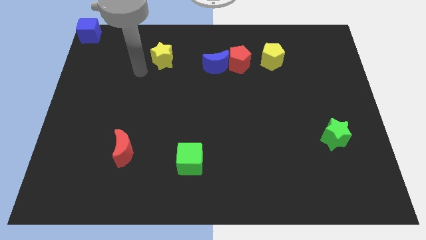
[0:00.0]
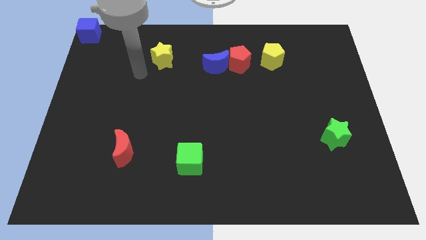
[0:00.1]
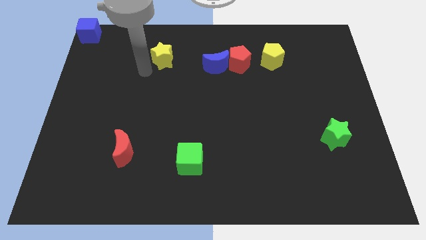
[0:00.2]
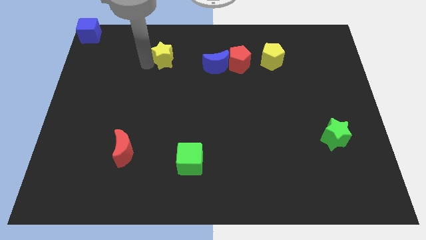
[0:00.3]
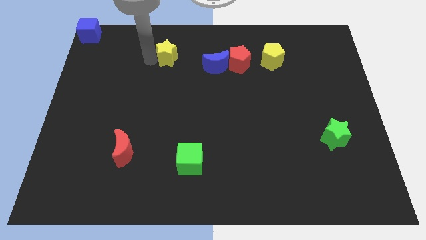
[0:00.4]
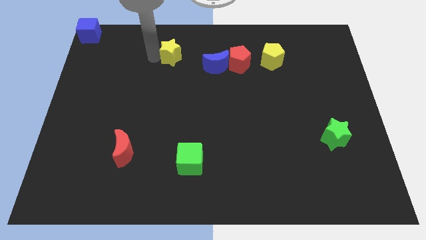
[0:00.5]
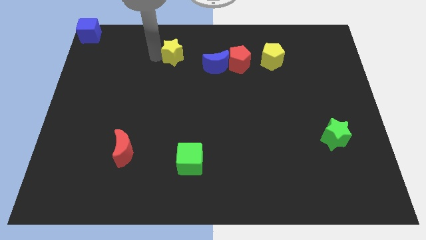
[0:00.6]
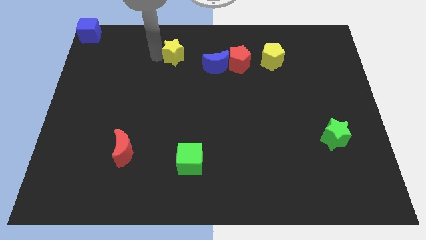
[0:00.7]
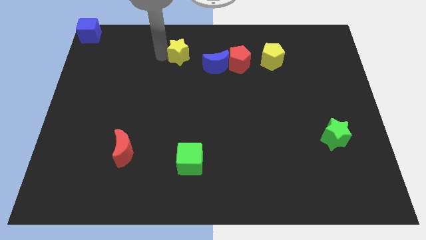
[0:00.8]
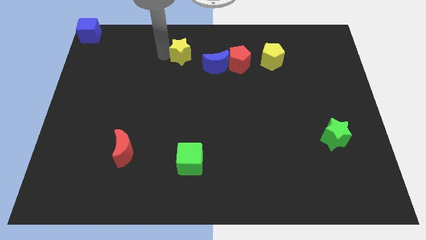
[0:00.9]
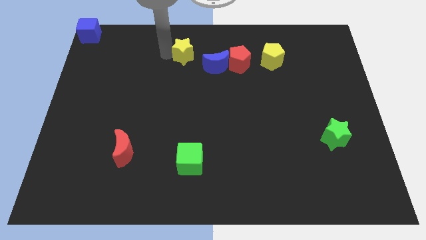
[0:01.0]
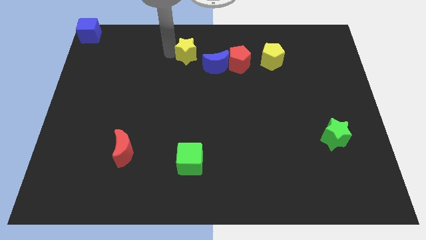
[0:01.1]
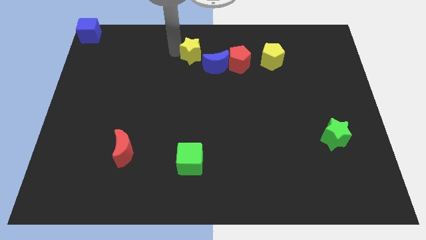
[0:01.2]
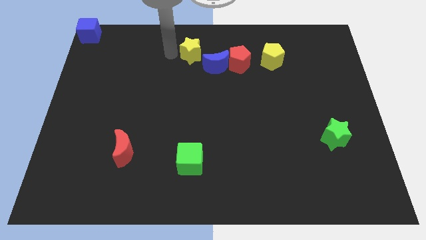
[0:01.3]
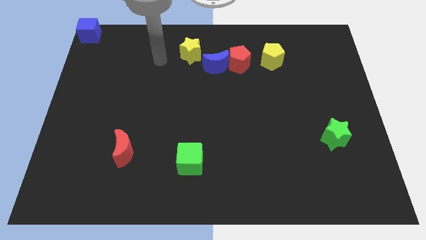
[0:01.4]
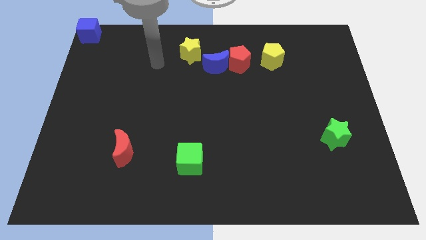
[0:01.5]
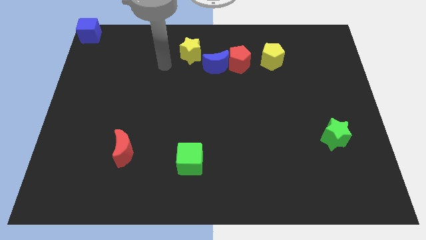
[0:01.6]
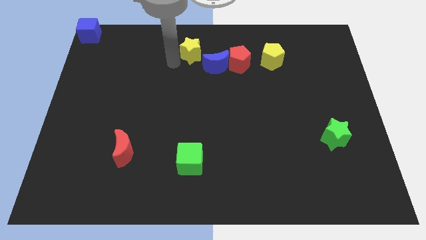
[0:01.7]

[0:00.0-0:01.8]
move the yellow star towards the blue moon

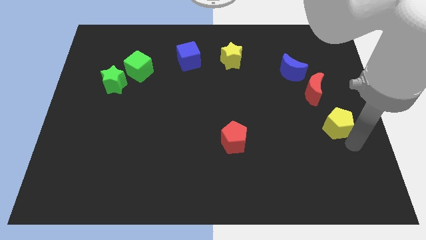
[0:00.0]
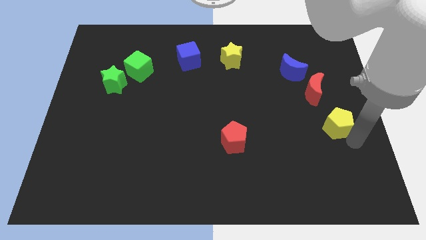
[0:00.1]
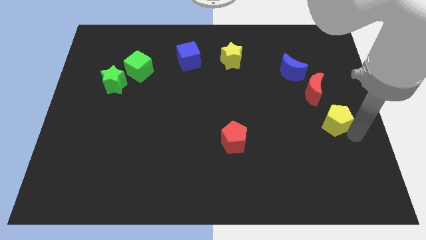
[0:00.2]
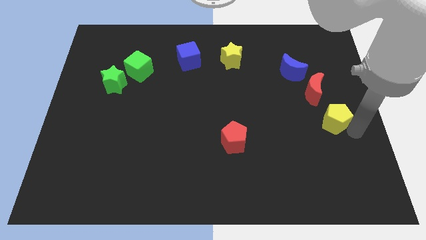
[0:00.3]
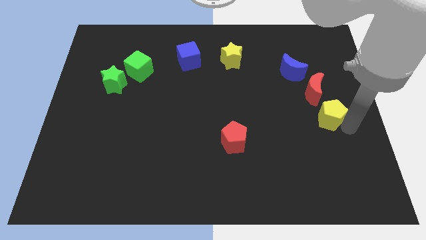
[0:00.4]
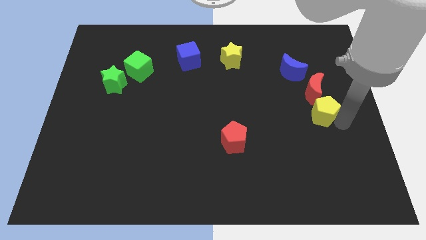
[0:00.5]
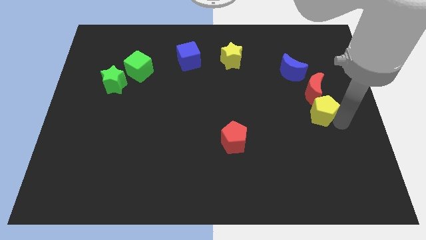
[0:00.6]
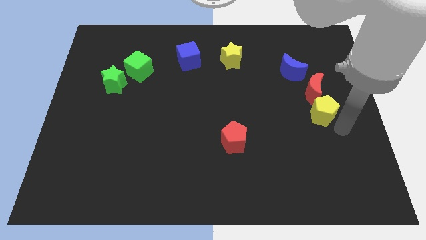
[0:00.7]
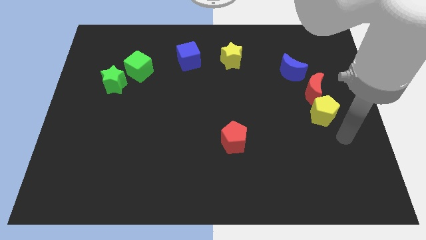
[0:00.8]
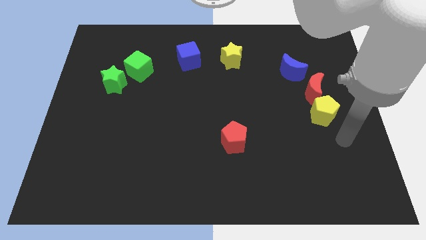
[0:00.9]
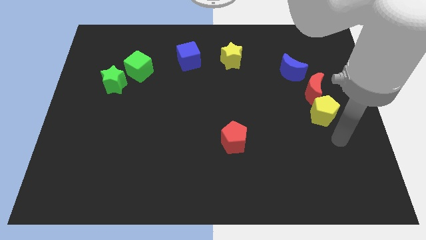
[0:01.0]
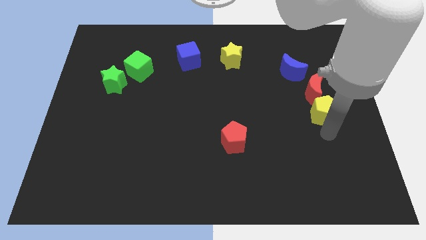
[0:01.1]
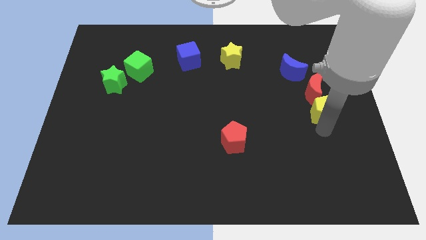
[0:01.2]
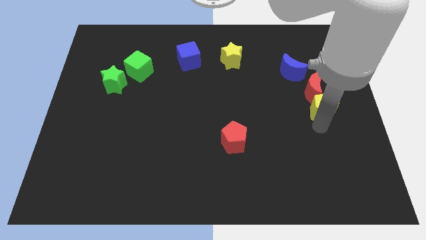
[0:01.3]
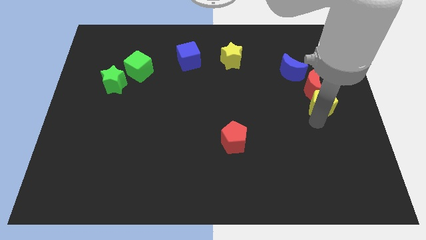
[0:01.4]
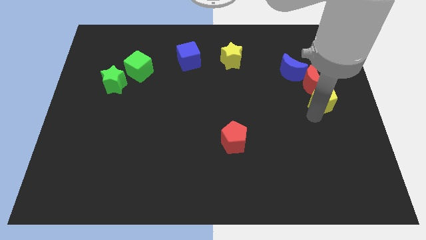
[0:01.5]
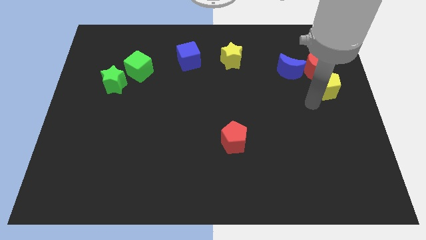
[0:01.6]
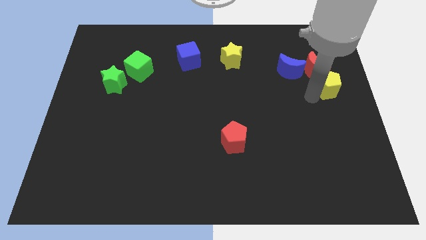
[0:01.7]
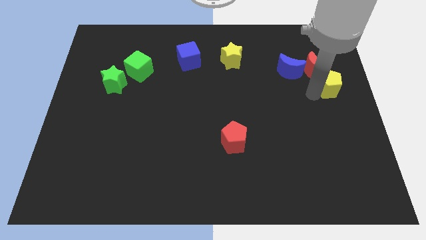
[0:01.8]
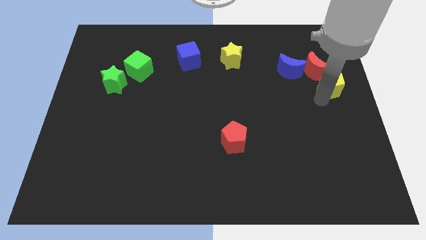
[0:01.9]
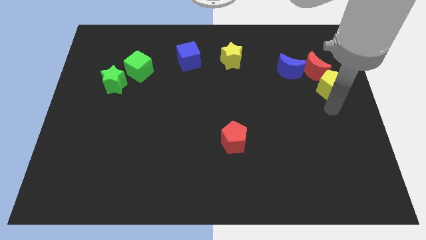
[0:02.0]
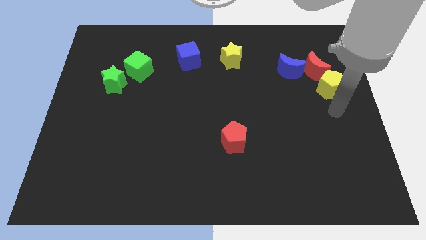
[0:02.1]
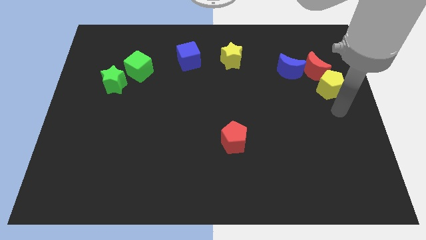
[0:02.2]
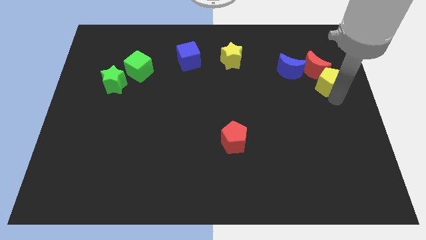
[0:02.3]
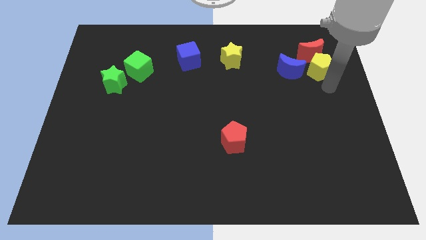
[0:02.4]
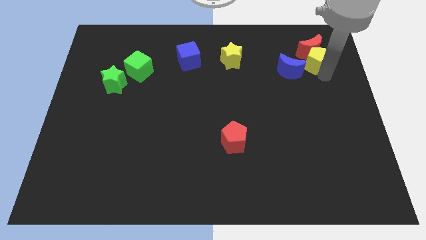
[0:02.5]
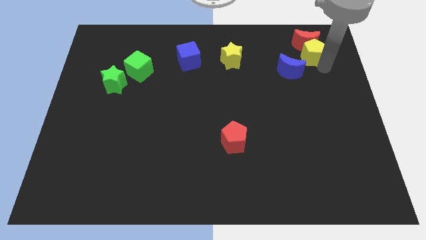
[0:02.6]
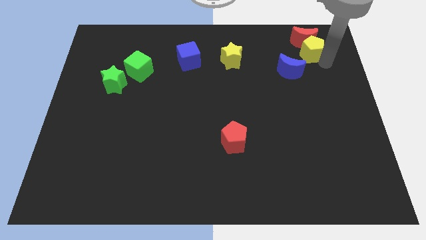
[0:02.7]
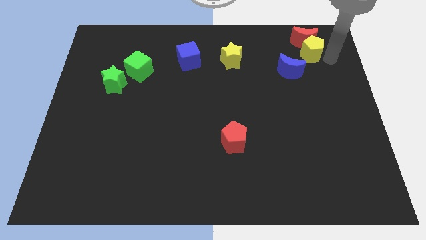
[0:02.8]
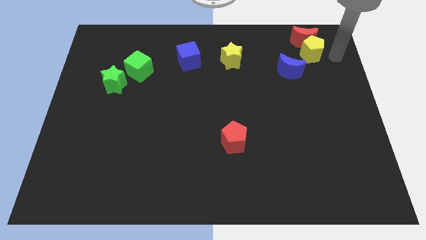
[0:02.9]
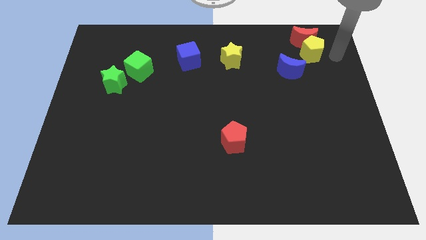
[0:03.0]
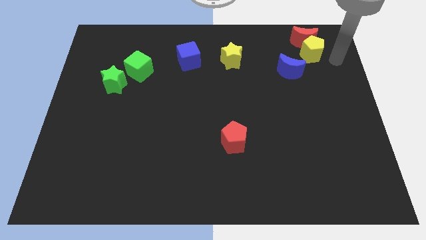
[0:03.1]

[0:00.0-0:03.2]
move the yellow pentagon and red crescent top right of the board

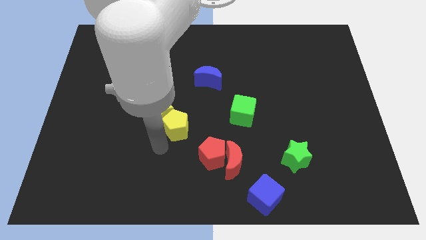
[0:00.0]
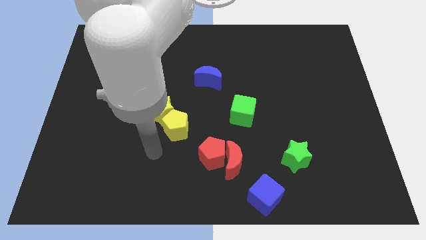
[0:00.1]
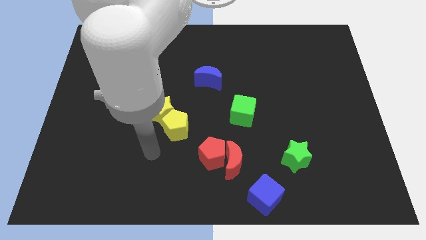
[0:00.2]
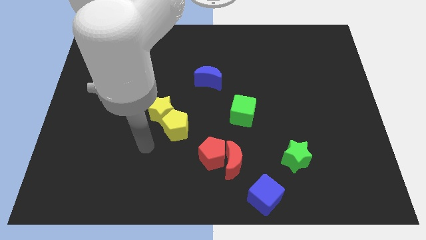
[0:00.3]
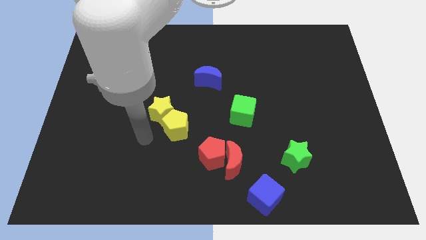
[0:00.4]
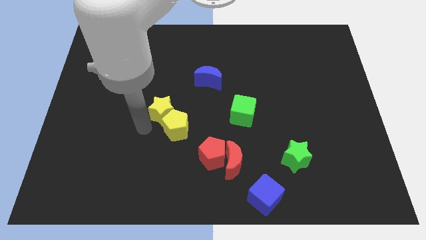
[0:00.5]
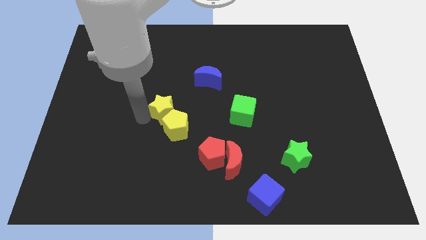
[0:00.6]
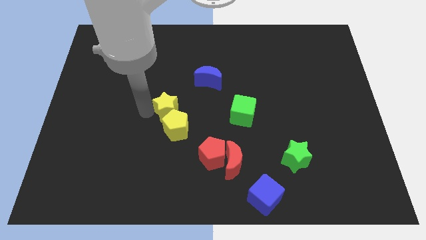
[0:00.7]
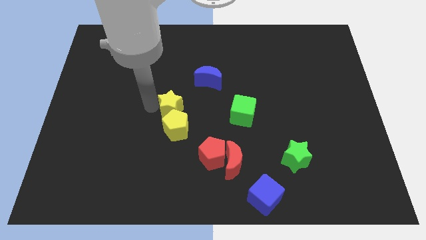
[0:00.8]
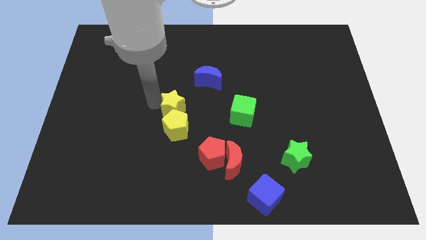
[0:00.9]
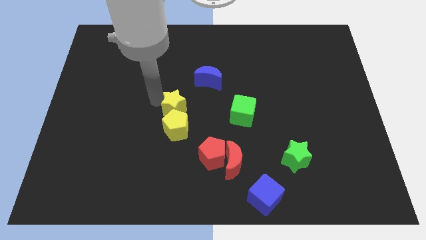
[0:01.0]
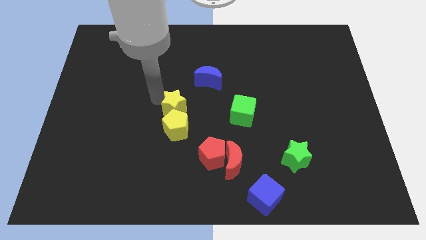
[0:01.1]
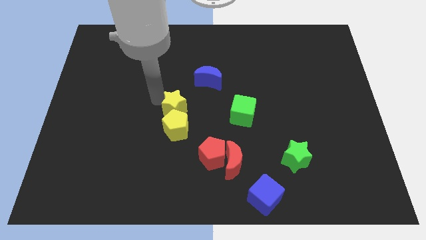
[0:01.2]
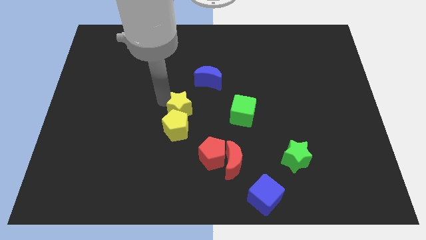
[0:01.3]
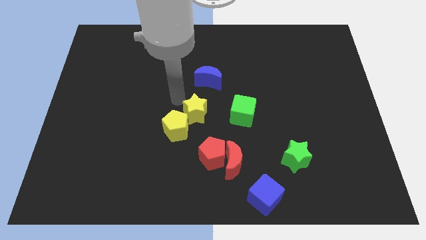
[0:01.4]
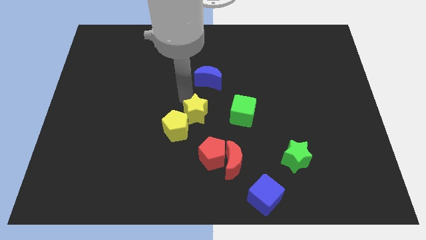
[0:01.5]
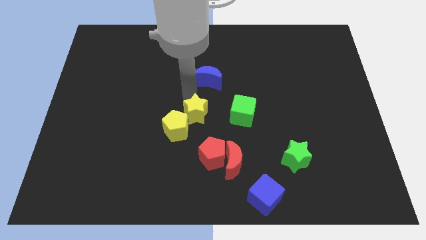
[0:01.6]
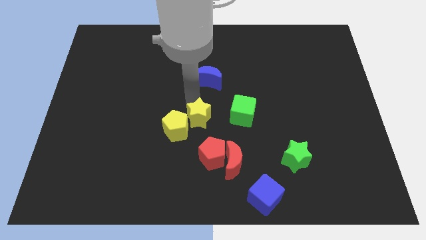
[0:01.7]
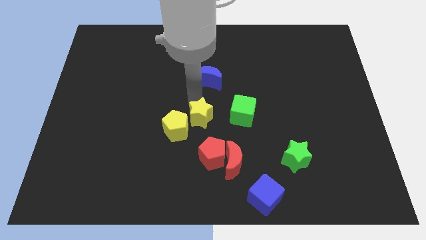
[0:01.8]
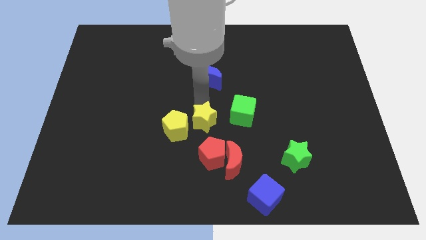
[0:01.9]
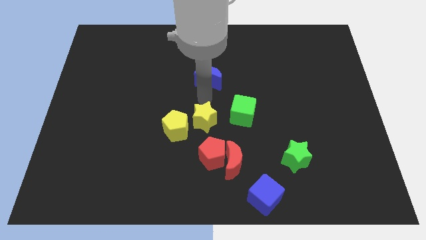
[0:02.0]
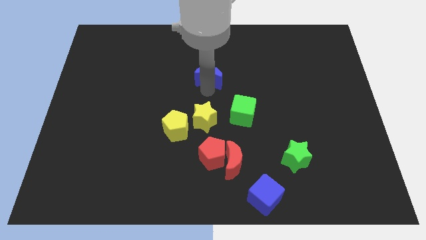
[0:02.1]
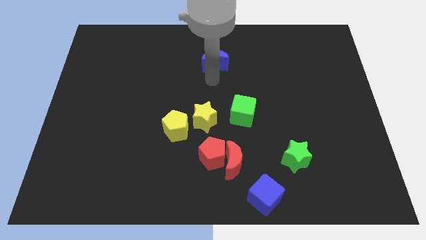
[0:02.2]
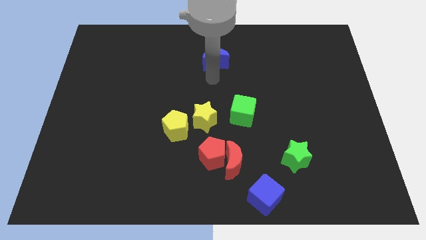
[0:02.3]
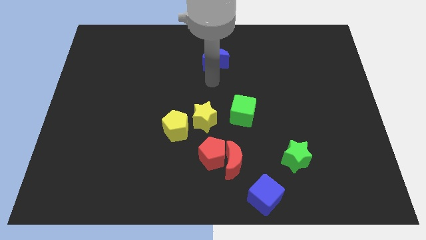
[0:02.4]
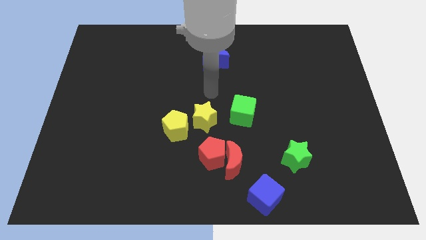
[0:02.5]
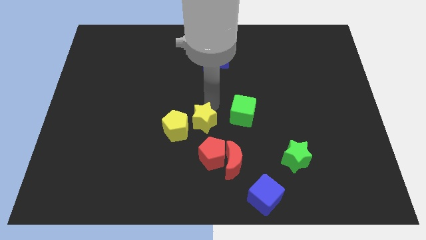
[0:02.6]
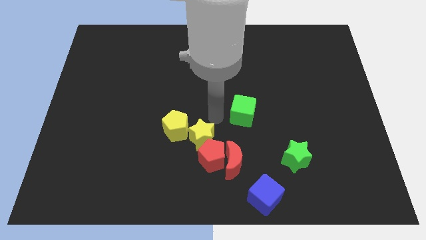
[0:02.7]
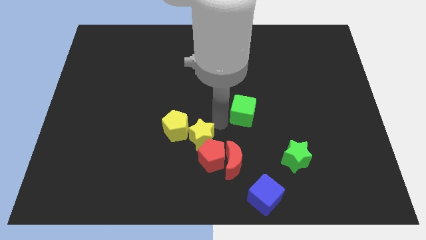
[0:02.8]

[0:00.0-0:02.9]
place yellow star to the left of green cube

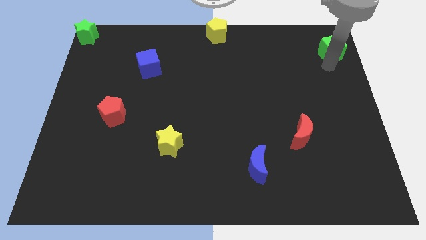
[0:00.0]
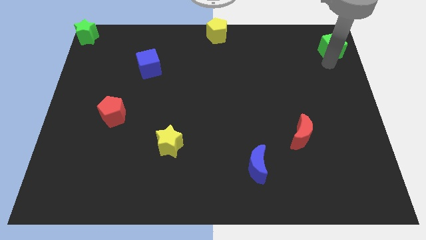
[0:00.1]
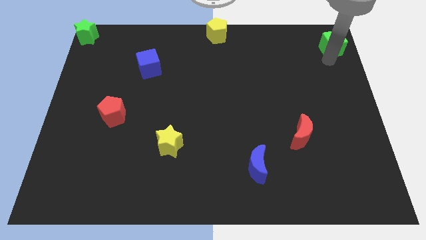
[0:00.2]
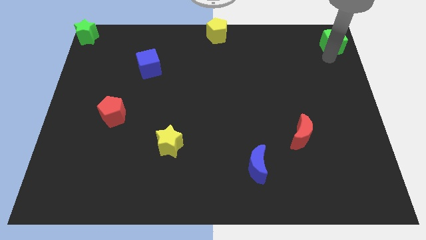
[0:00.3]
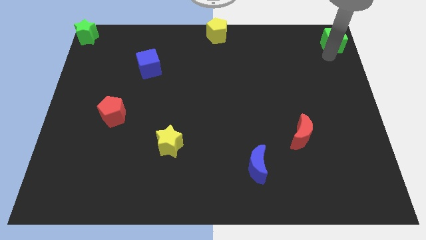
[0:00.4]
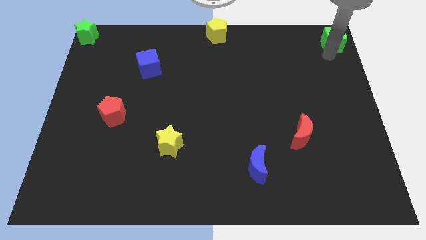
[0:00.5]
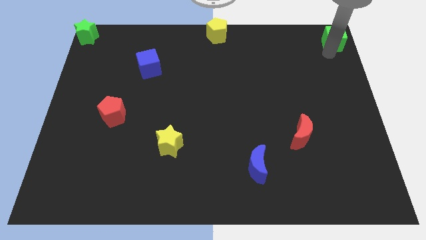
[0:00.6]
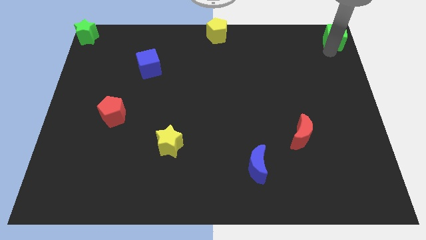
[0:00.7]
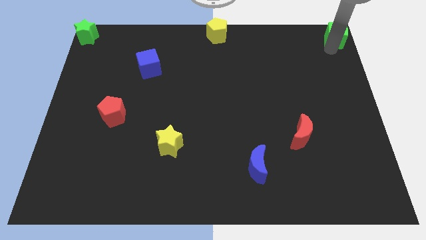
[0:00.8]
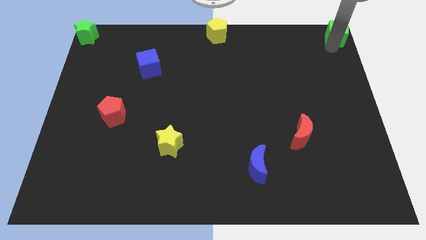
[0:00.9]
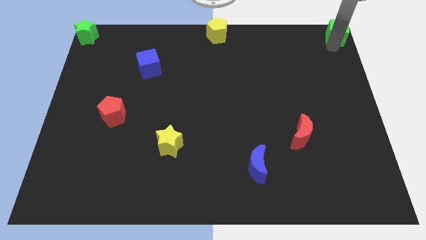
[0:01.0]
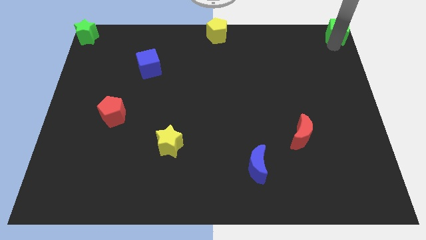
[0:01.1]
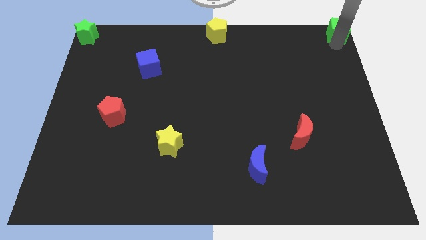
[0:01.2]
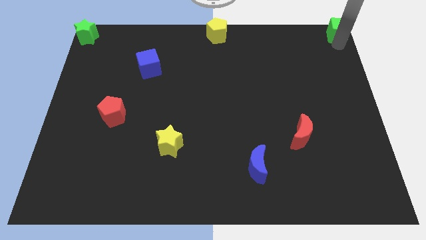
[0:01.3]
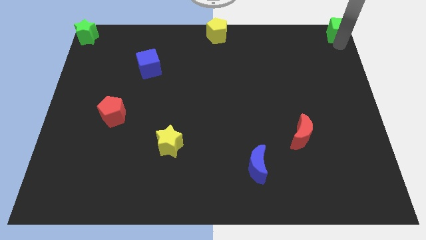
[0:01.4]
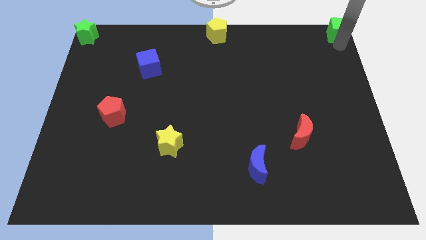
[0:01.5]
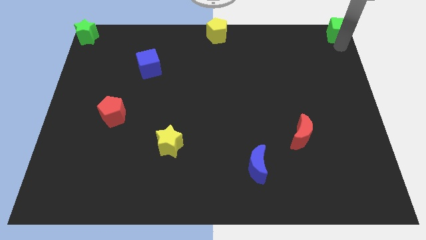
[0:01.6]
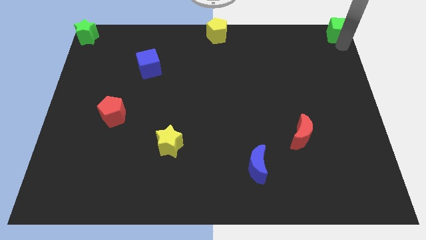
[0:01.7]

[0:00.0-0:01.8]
push the green cube to the top right corner of the board
